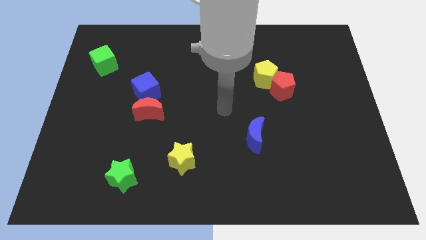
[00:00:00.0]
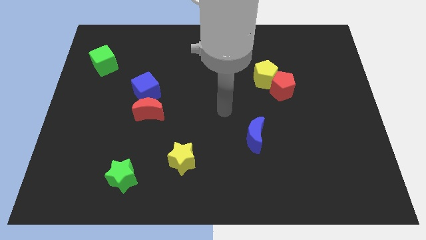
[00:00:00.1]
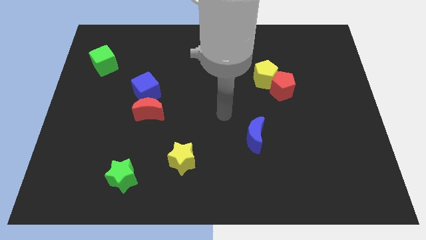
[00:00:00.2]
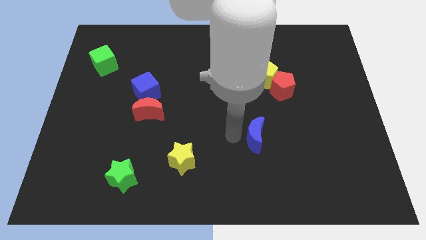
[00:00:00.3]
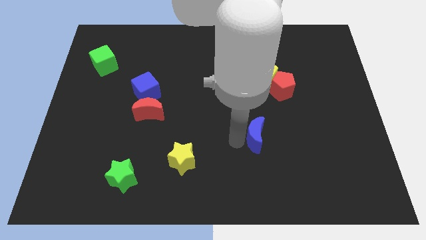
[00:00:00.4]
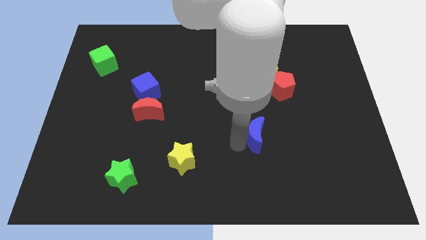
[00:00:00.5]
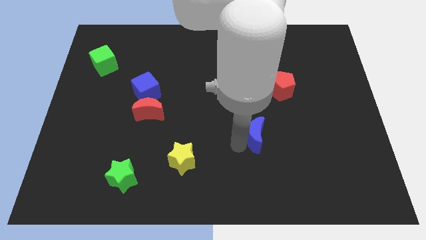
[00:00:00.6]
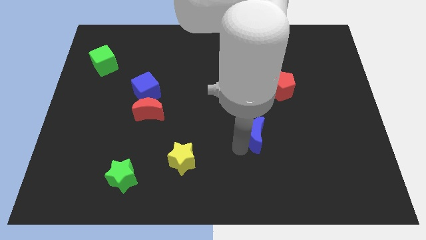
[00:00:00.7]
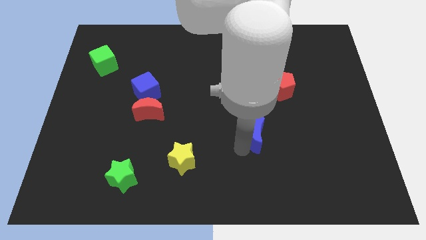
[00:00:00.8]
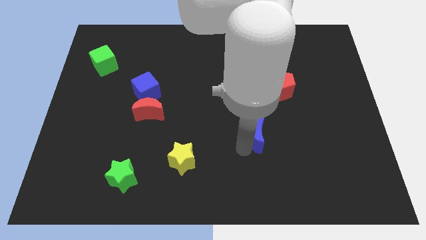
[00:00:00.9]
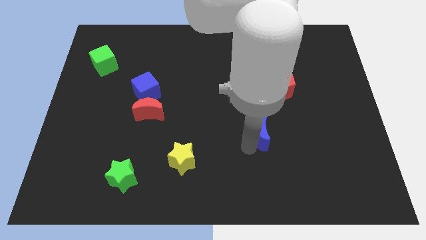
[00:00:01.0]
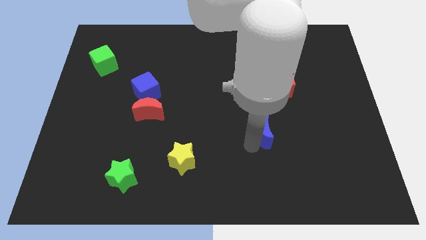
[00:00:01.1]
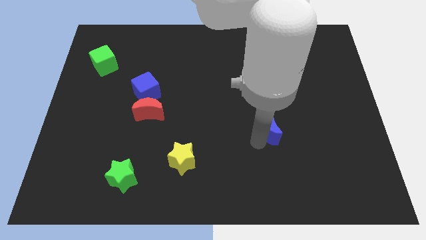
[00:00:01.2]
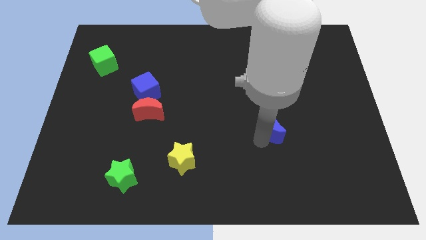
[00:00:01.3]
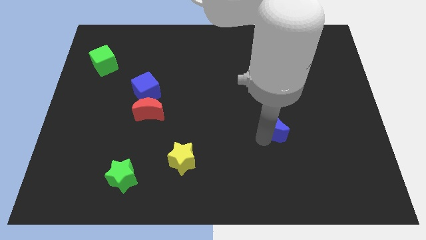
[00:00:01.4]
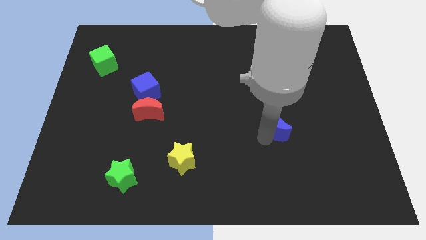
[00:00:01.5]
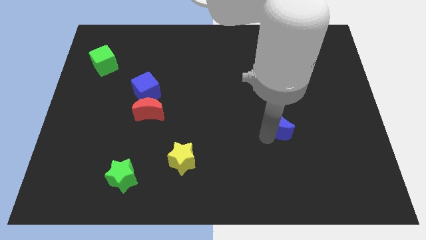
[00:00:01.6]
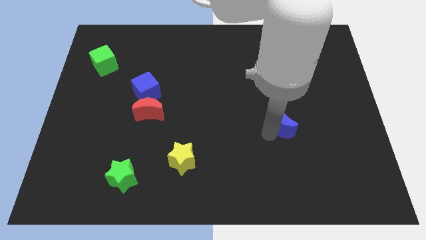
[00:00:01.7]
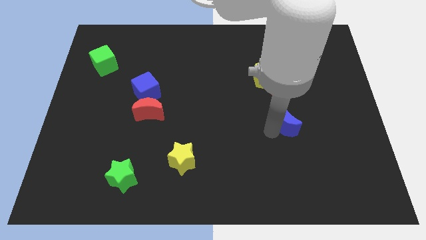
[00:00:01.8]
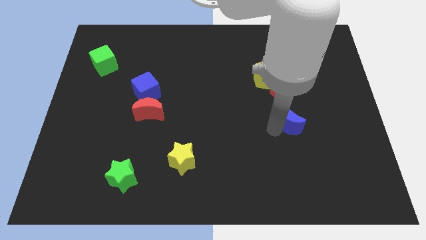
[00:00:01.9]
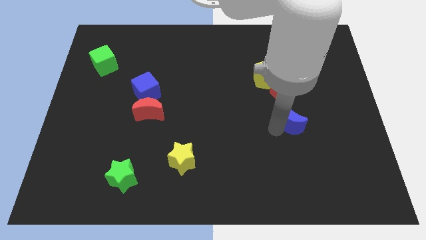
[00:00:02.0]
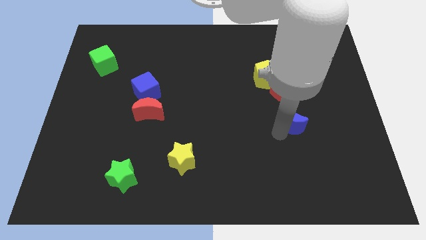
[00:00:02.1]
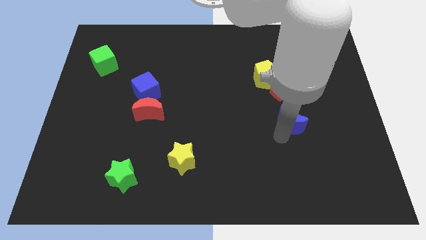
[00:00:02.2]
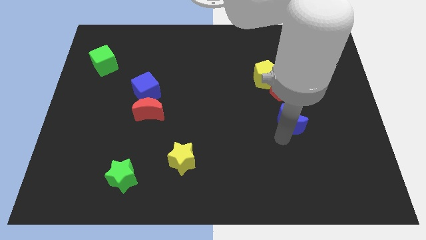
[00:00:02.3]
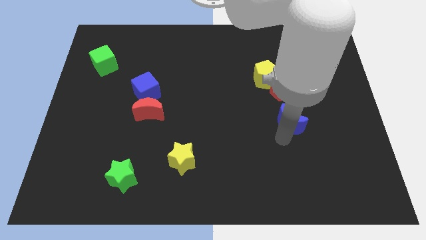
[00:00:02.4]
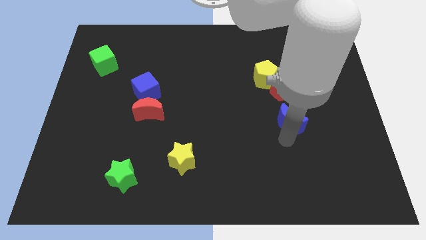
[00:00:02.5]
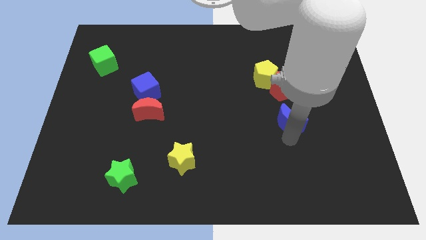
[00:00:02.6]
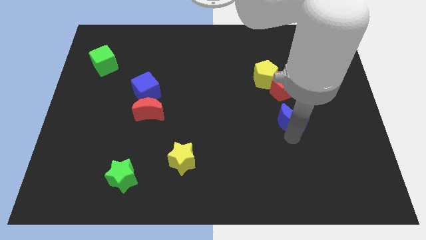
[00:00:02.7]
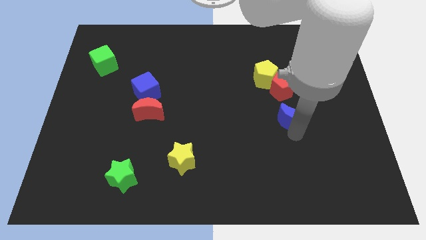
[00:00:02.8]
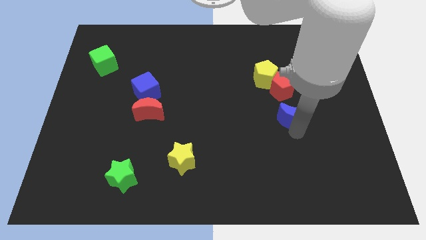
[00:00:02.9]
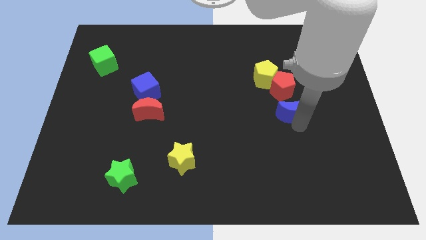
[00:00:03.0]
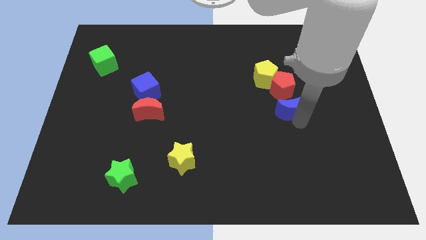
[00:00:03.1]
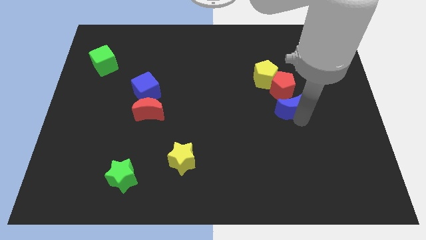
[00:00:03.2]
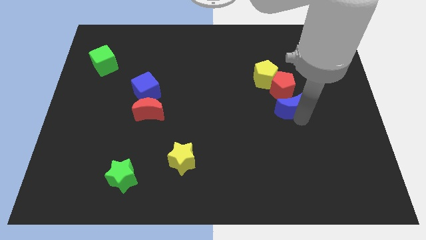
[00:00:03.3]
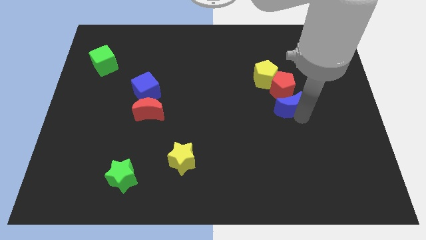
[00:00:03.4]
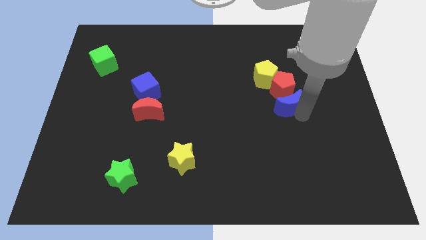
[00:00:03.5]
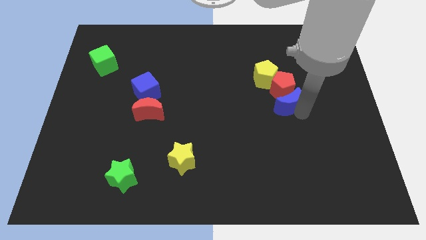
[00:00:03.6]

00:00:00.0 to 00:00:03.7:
push the blue moon to the red pentagon

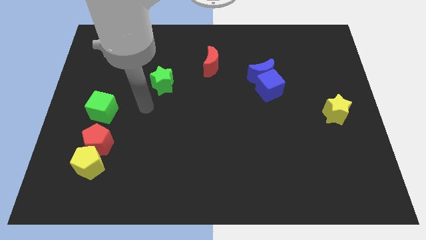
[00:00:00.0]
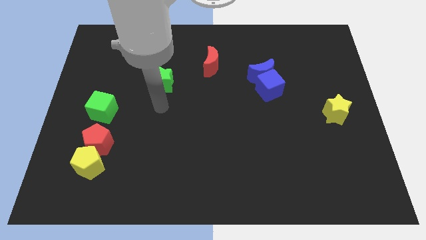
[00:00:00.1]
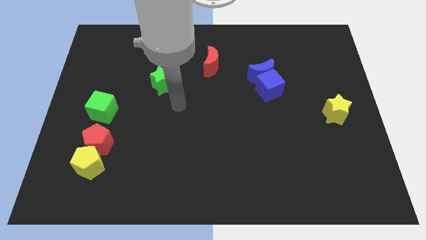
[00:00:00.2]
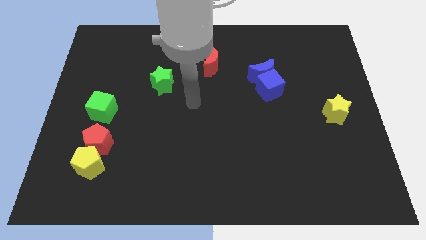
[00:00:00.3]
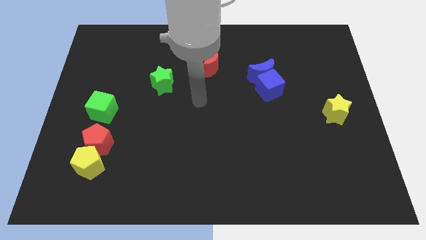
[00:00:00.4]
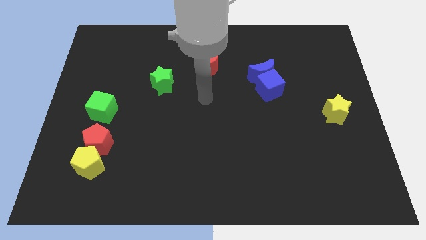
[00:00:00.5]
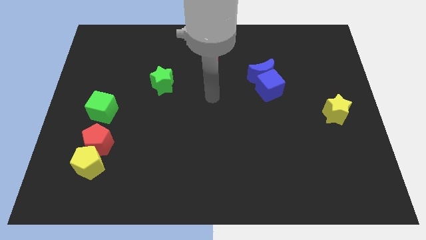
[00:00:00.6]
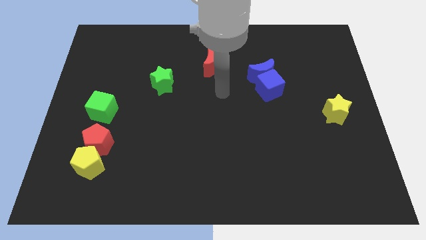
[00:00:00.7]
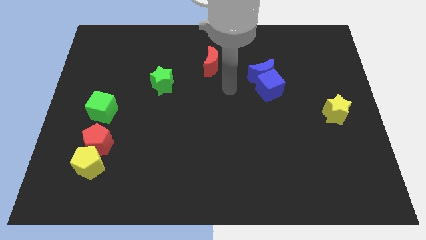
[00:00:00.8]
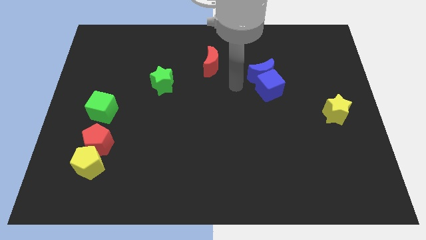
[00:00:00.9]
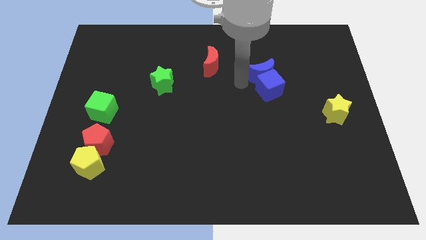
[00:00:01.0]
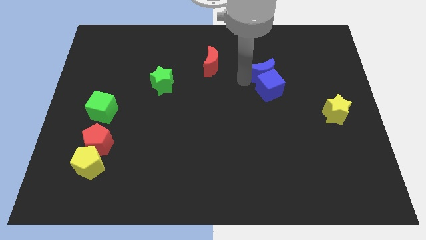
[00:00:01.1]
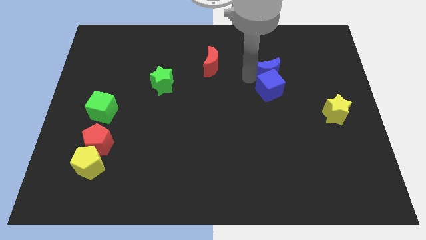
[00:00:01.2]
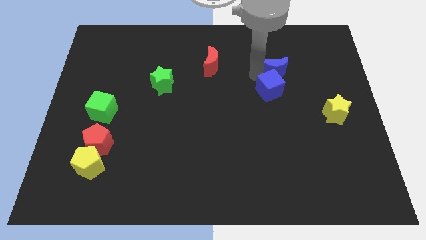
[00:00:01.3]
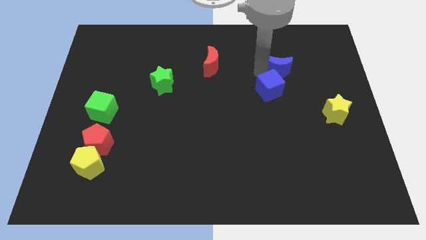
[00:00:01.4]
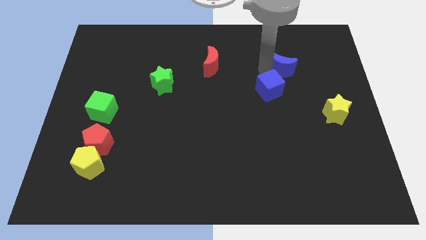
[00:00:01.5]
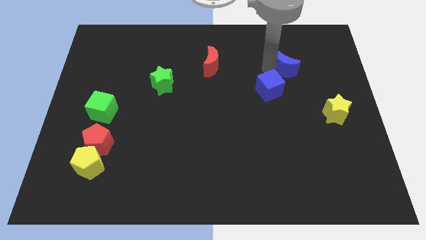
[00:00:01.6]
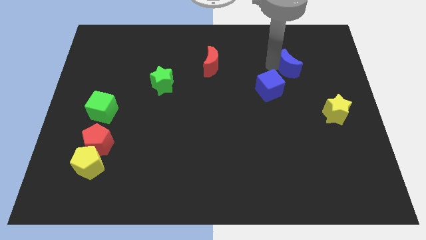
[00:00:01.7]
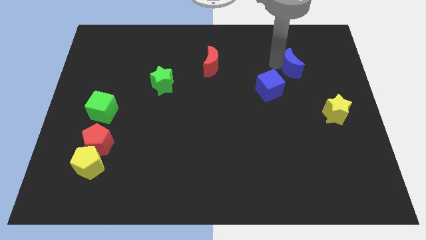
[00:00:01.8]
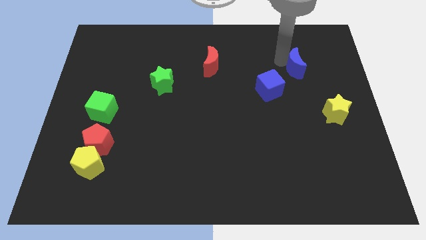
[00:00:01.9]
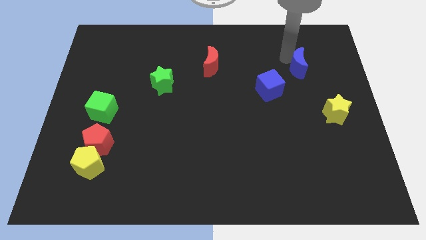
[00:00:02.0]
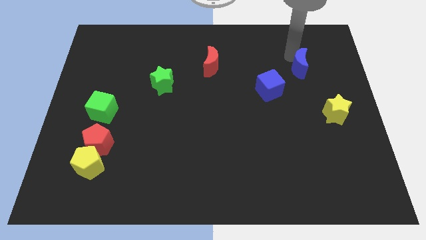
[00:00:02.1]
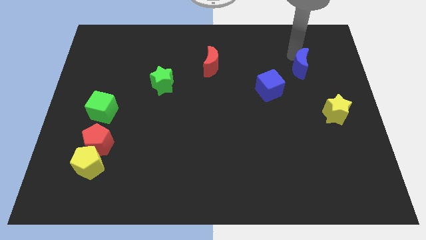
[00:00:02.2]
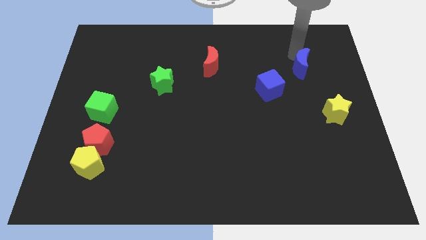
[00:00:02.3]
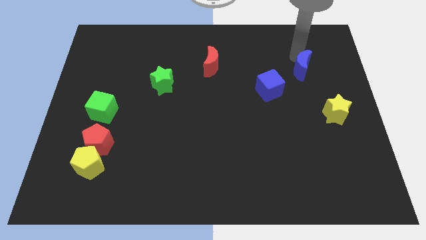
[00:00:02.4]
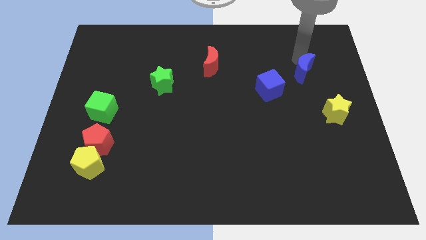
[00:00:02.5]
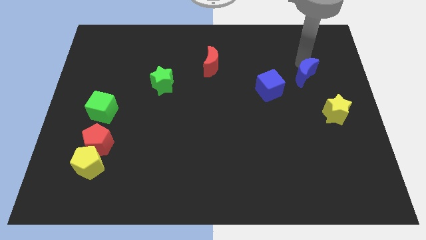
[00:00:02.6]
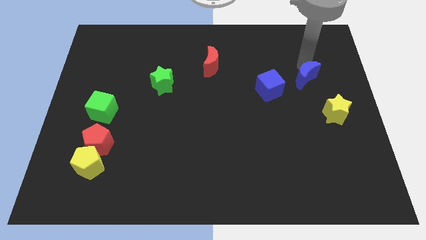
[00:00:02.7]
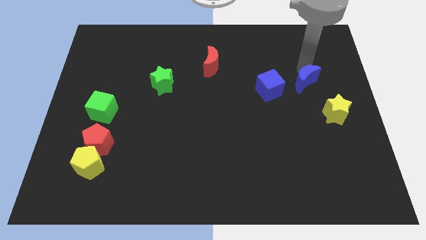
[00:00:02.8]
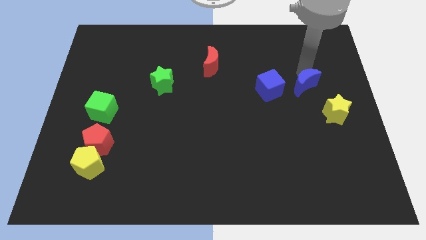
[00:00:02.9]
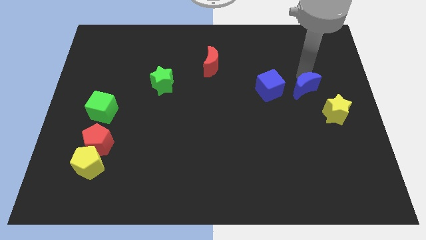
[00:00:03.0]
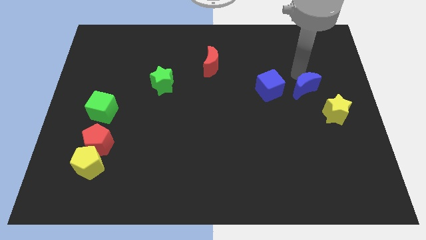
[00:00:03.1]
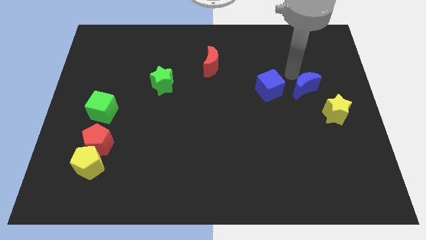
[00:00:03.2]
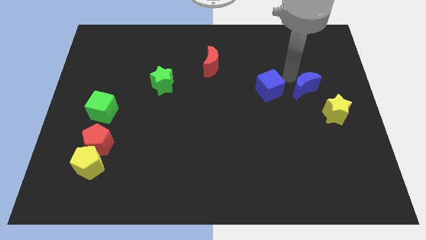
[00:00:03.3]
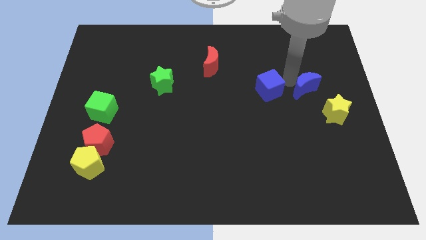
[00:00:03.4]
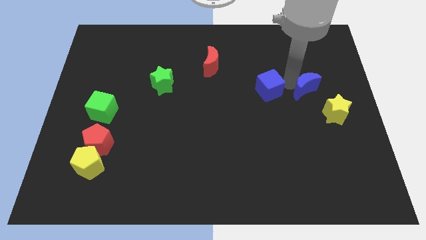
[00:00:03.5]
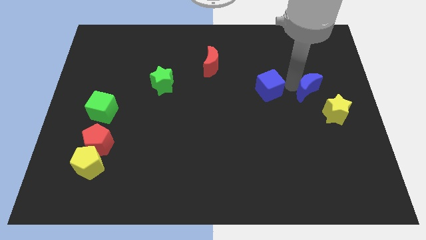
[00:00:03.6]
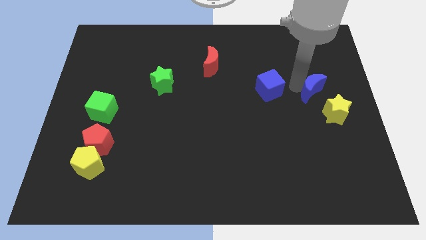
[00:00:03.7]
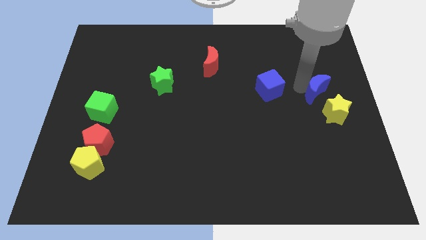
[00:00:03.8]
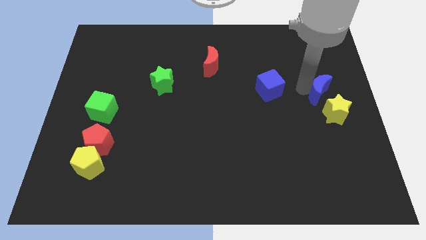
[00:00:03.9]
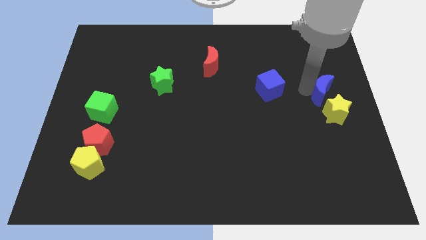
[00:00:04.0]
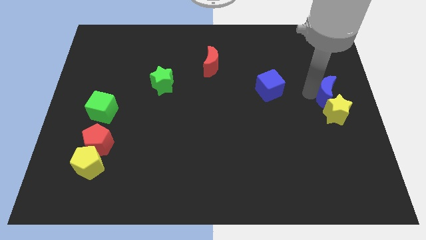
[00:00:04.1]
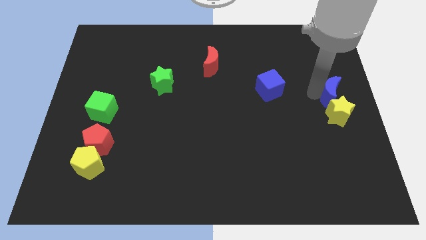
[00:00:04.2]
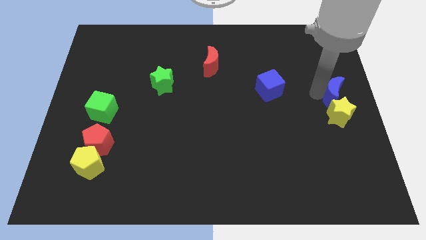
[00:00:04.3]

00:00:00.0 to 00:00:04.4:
push the blue moon next to the yellow star

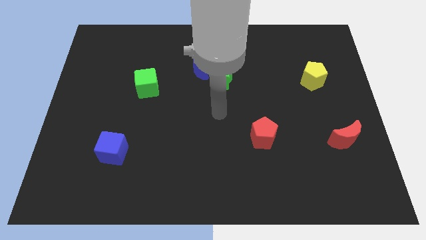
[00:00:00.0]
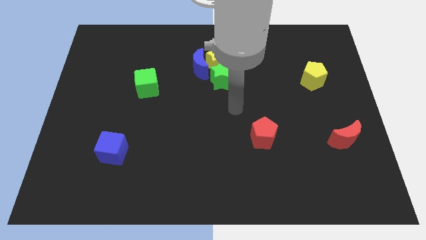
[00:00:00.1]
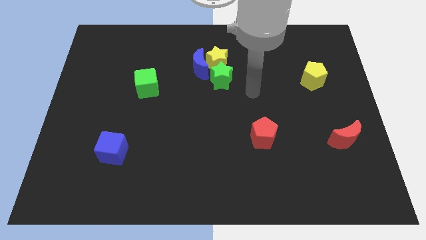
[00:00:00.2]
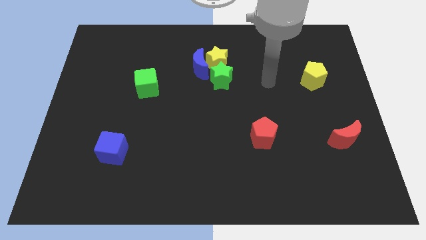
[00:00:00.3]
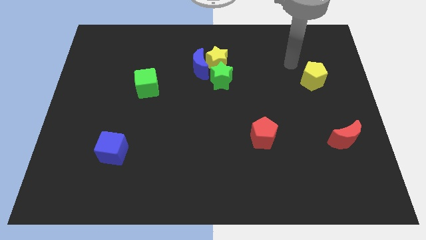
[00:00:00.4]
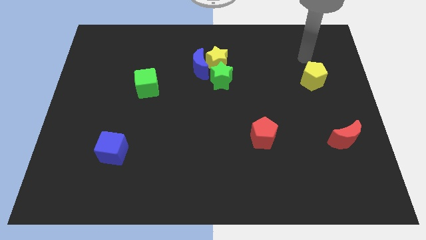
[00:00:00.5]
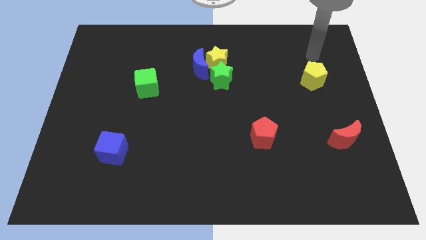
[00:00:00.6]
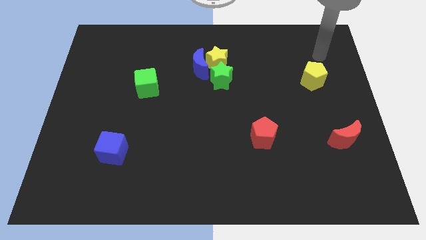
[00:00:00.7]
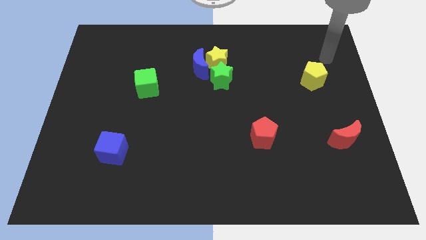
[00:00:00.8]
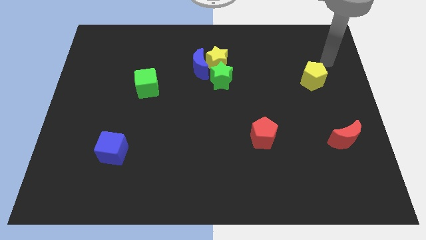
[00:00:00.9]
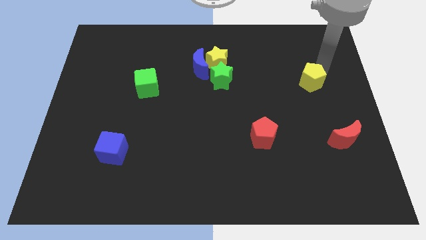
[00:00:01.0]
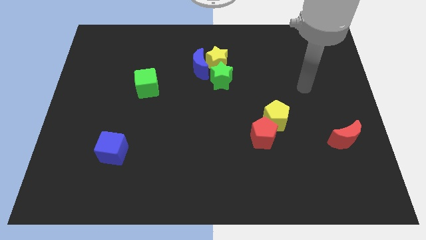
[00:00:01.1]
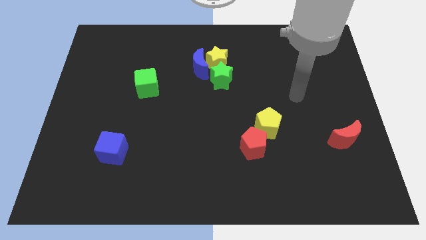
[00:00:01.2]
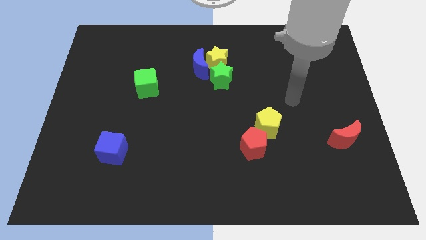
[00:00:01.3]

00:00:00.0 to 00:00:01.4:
slide the yellow pentagon next to the red pentagon
